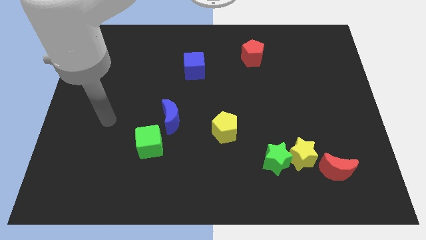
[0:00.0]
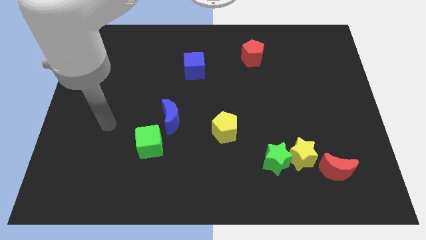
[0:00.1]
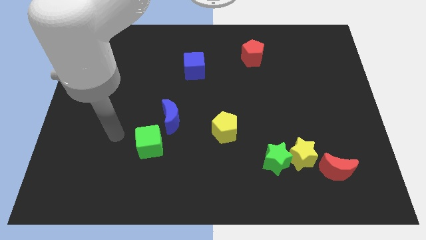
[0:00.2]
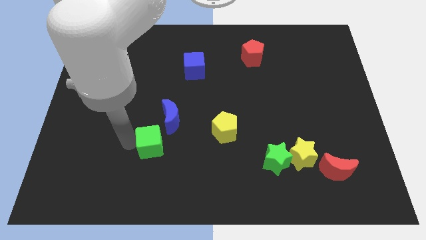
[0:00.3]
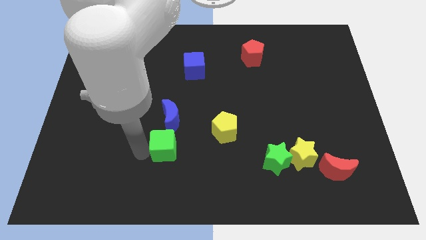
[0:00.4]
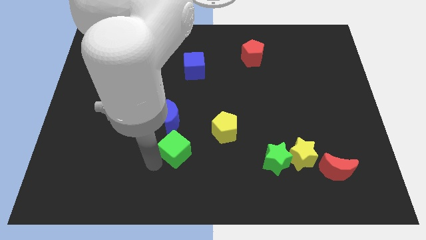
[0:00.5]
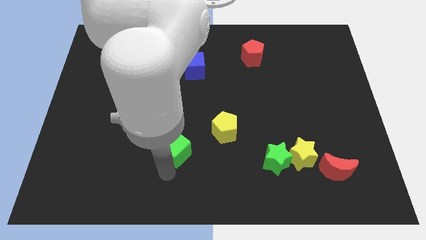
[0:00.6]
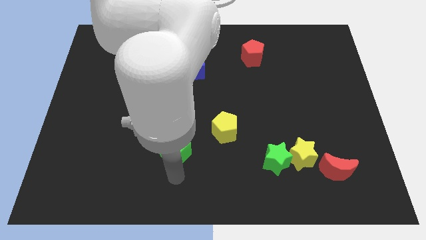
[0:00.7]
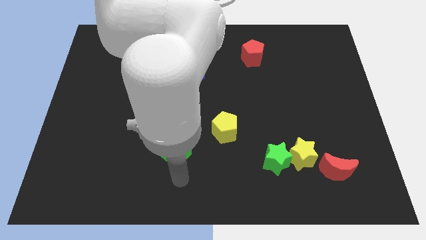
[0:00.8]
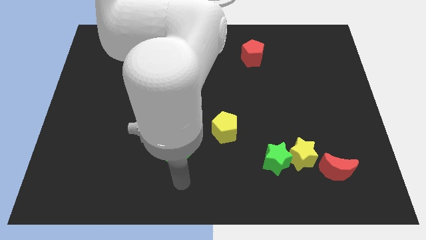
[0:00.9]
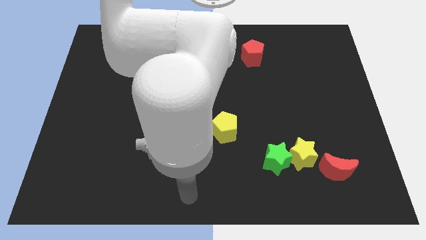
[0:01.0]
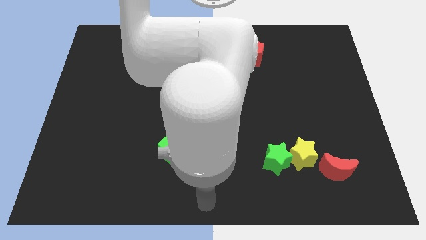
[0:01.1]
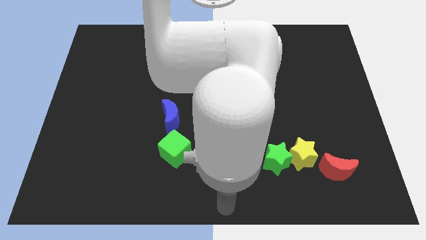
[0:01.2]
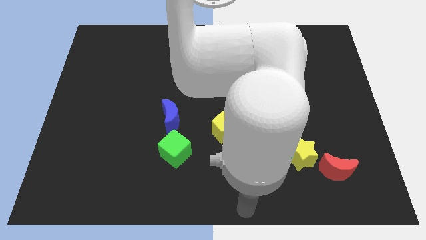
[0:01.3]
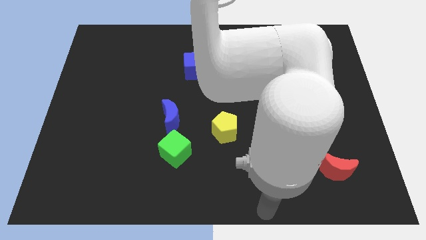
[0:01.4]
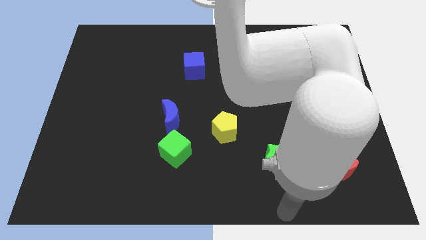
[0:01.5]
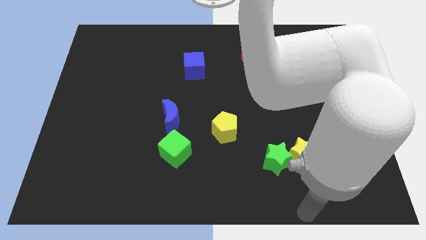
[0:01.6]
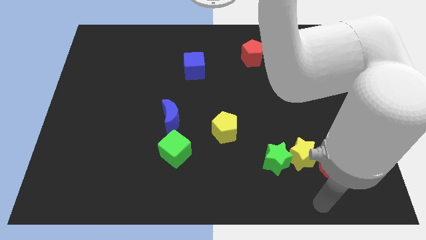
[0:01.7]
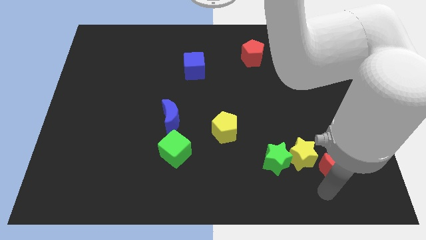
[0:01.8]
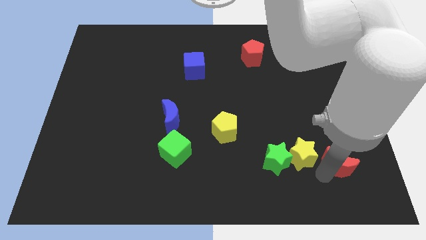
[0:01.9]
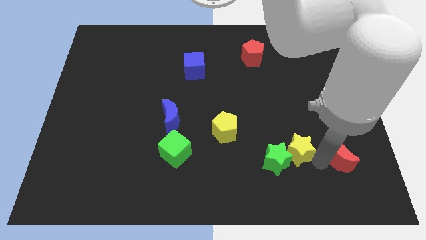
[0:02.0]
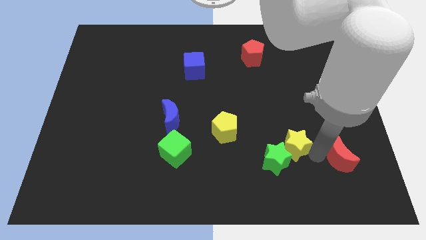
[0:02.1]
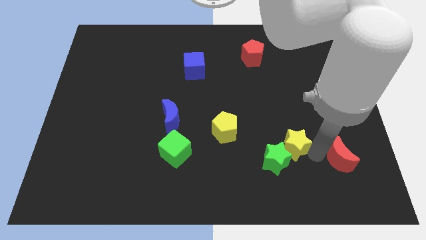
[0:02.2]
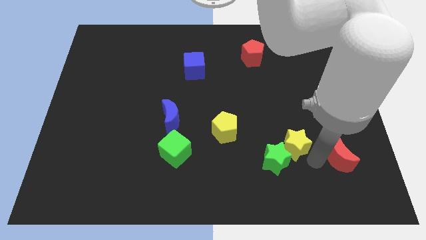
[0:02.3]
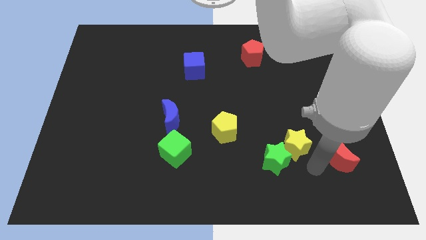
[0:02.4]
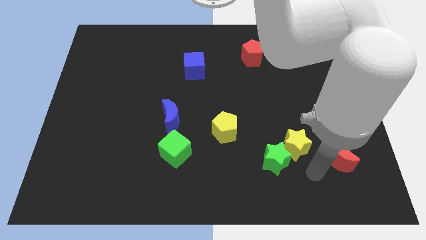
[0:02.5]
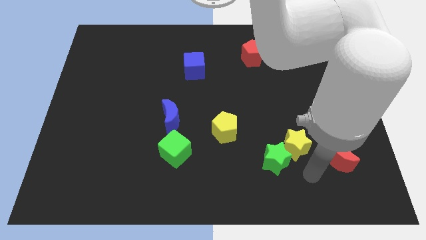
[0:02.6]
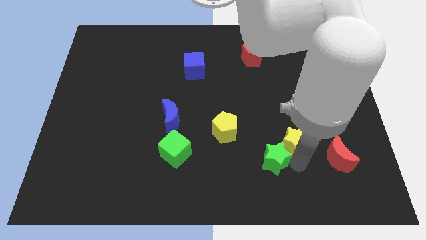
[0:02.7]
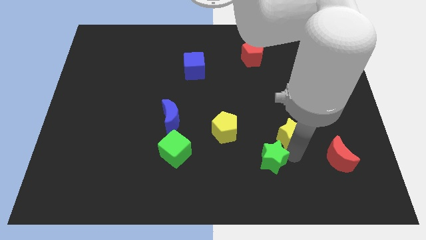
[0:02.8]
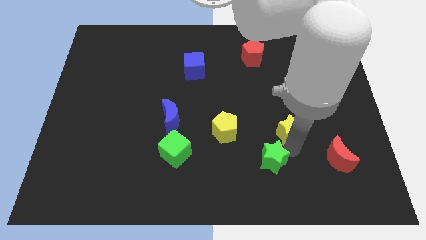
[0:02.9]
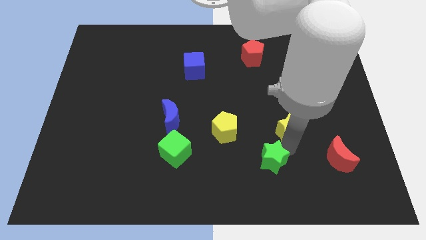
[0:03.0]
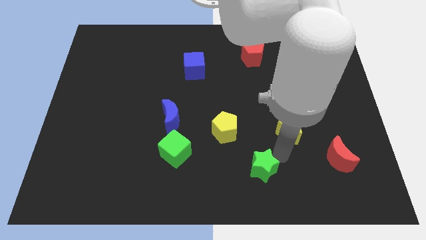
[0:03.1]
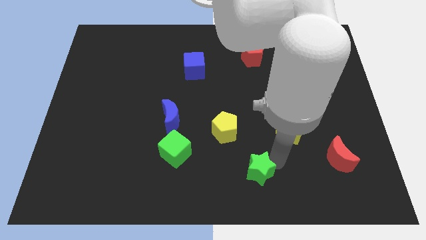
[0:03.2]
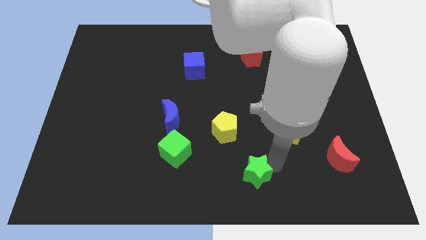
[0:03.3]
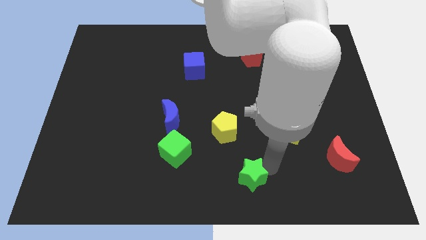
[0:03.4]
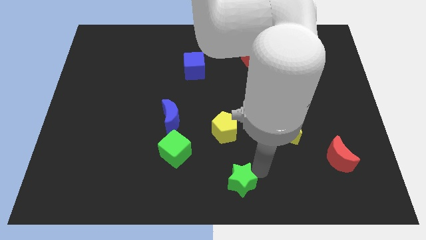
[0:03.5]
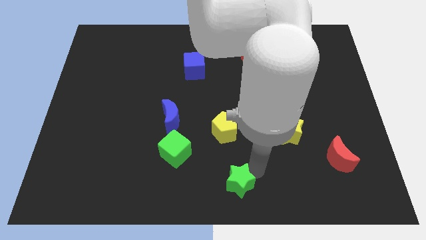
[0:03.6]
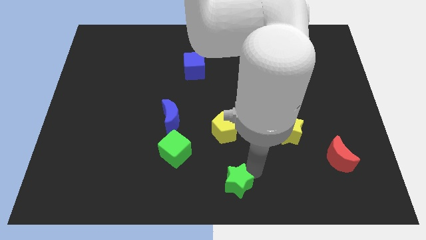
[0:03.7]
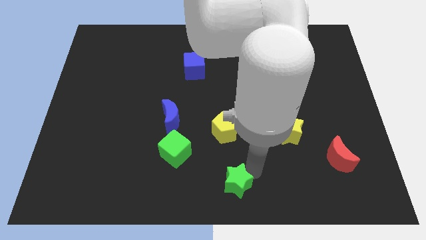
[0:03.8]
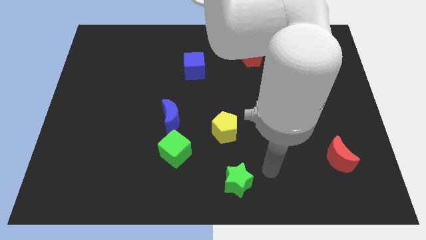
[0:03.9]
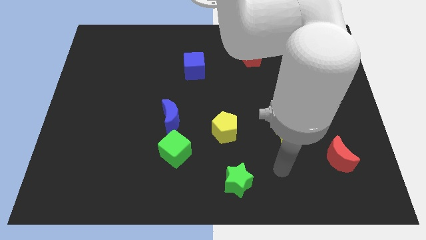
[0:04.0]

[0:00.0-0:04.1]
separate green star from yellow star

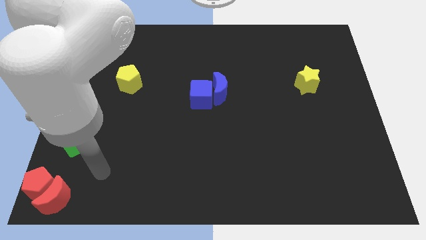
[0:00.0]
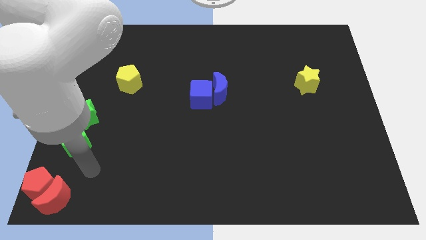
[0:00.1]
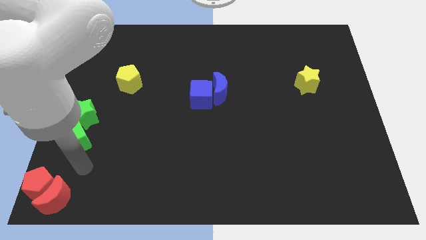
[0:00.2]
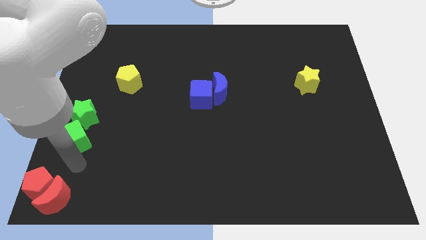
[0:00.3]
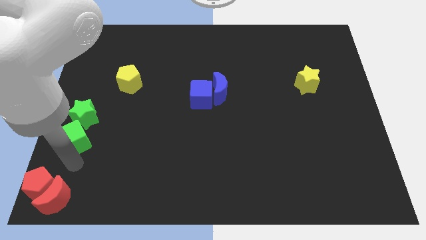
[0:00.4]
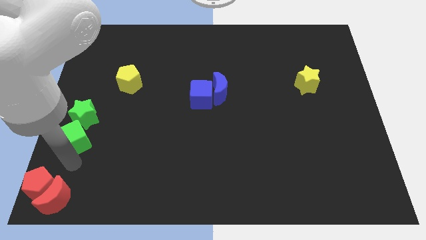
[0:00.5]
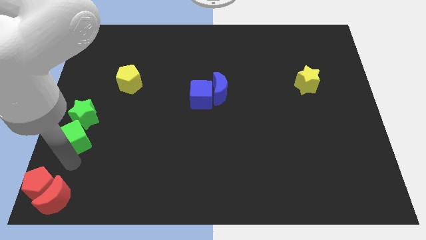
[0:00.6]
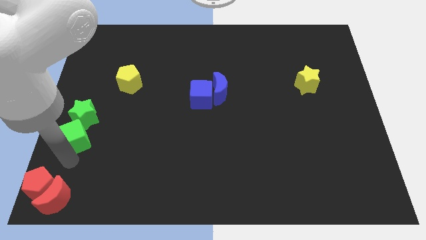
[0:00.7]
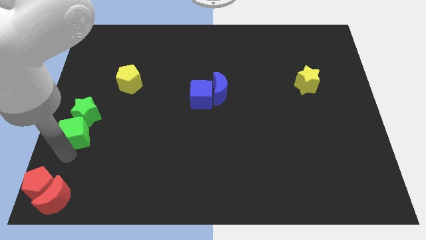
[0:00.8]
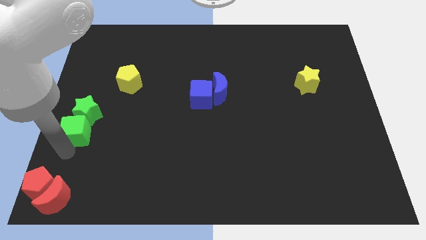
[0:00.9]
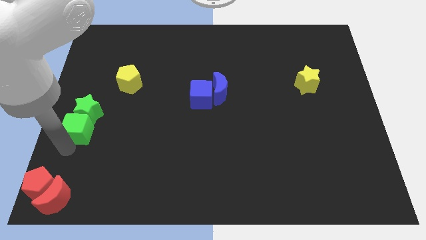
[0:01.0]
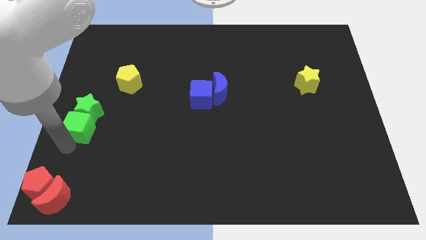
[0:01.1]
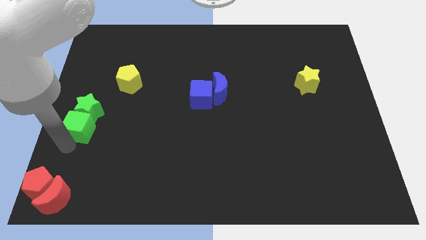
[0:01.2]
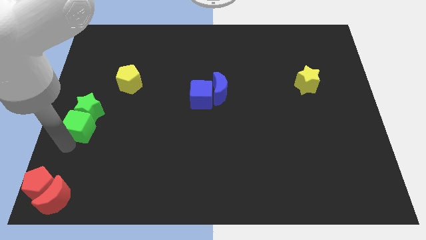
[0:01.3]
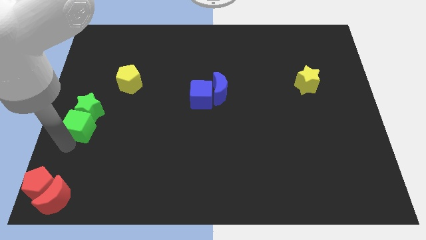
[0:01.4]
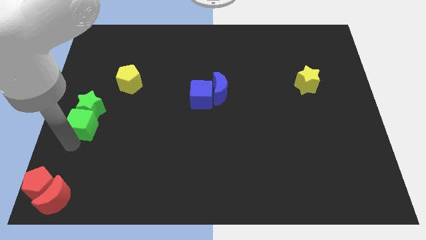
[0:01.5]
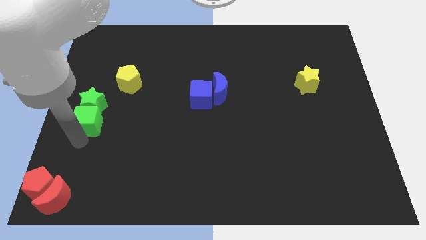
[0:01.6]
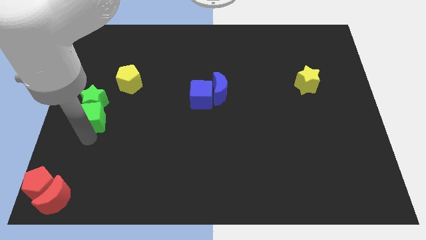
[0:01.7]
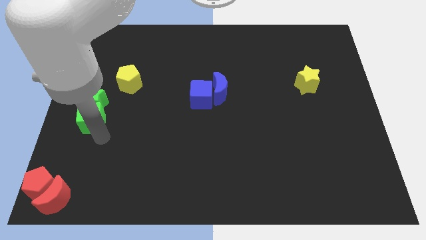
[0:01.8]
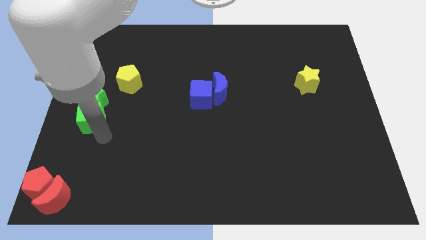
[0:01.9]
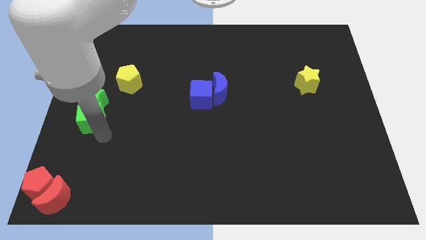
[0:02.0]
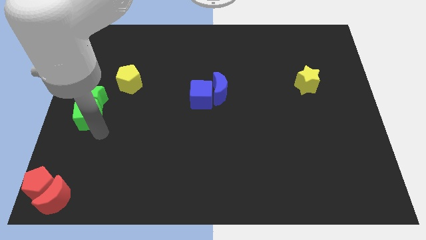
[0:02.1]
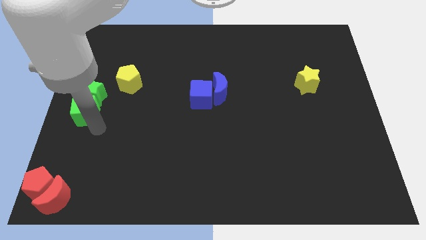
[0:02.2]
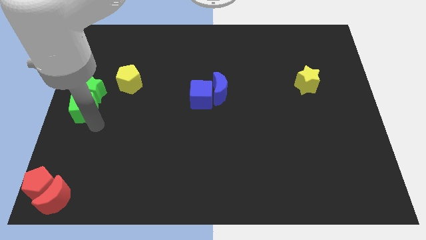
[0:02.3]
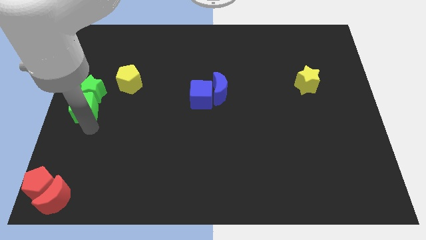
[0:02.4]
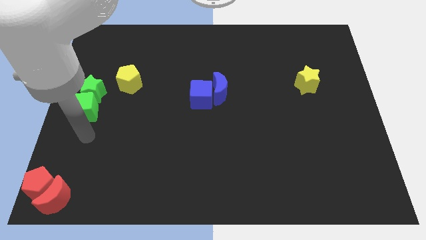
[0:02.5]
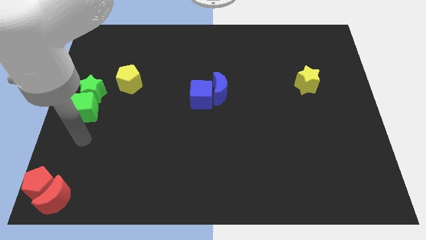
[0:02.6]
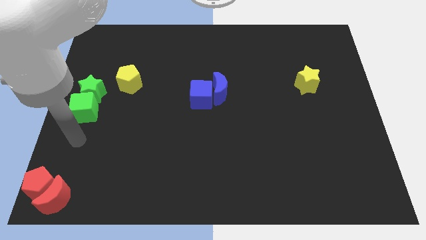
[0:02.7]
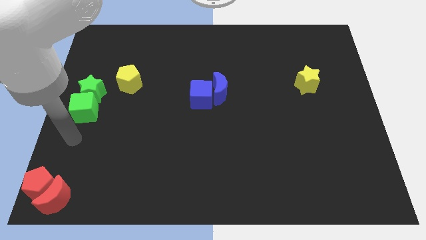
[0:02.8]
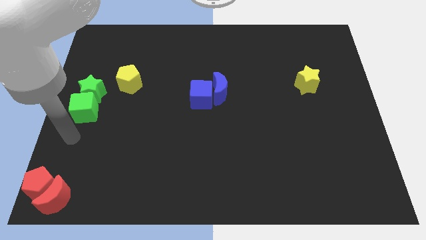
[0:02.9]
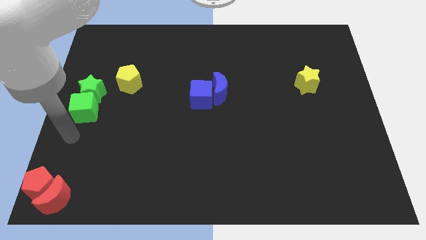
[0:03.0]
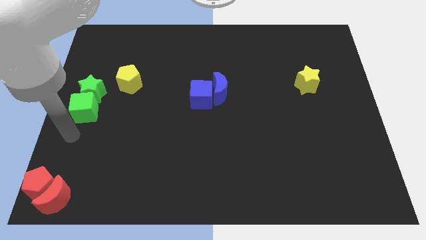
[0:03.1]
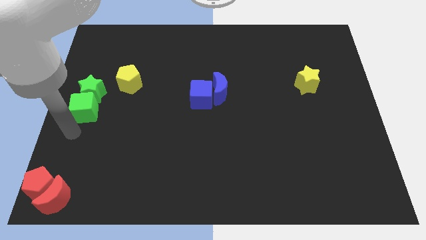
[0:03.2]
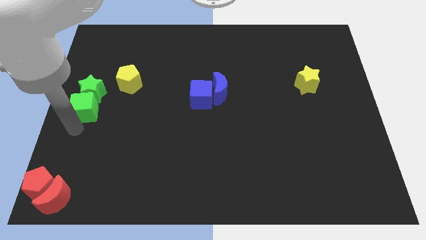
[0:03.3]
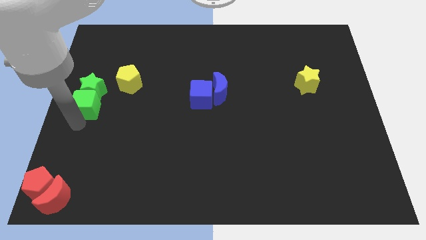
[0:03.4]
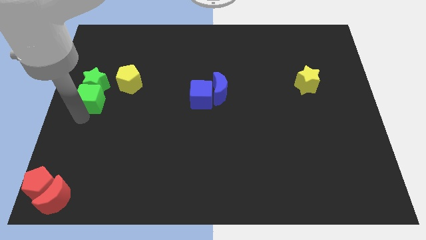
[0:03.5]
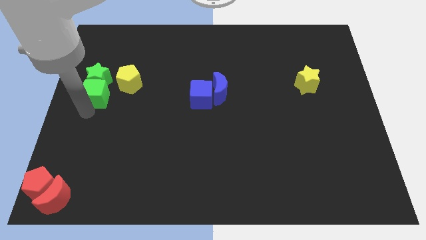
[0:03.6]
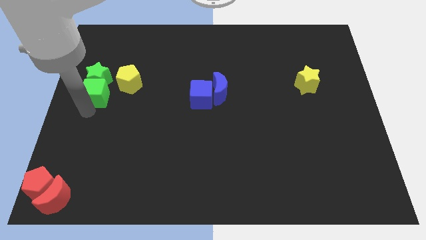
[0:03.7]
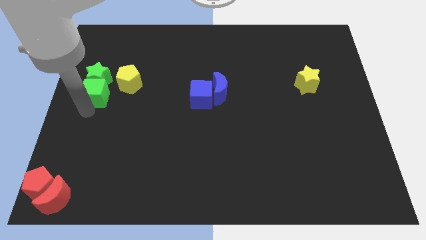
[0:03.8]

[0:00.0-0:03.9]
move the green star parallel left of the yellow pentagon

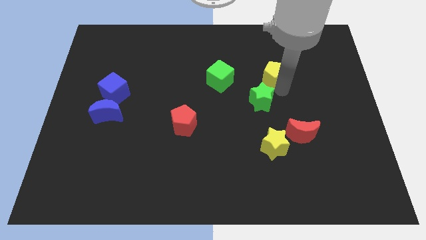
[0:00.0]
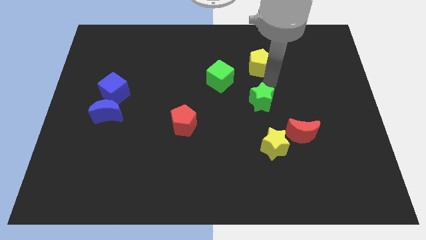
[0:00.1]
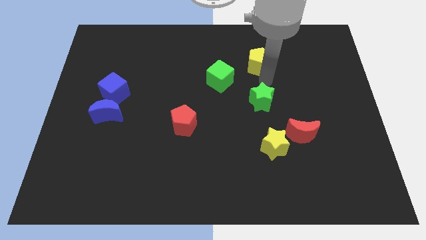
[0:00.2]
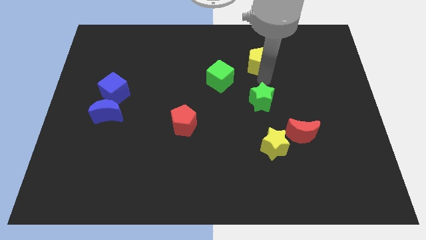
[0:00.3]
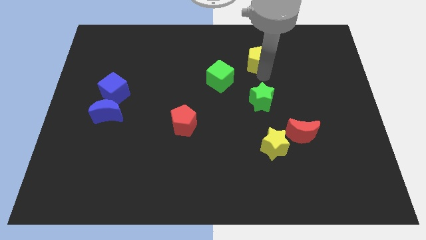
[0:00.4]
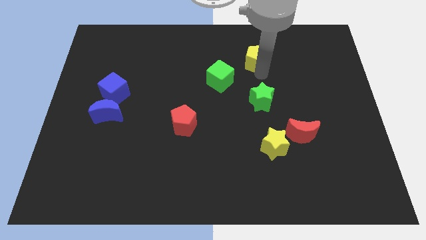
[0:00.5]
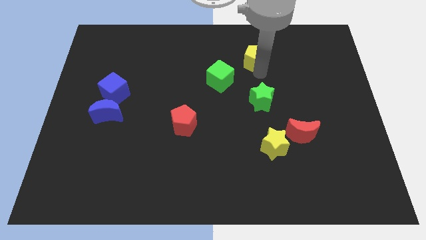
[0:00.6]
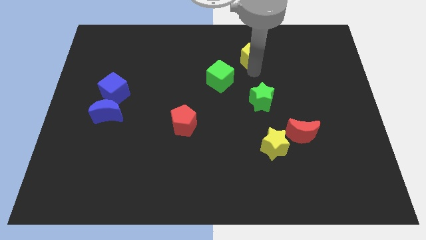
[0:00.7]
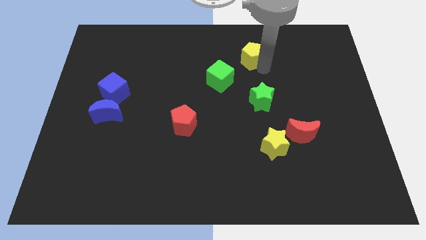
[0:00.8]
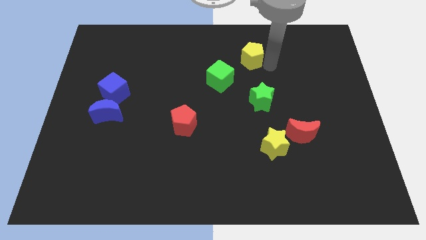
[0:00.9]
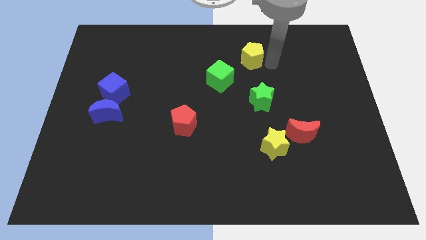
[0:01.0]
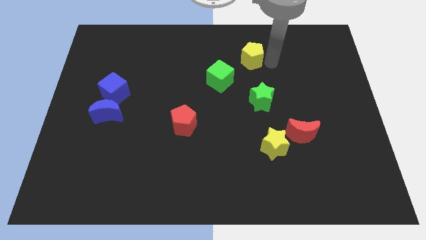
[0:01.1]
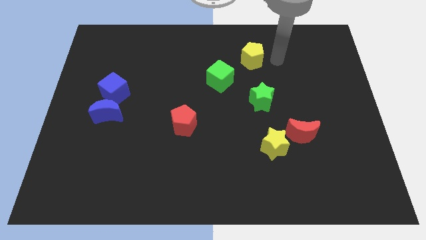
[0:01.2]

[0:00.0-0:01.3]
push yellow pentagon apart from green star
